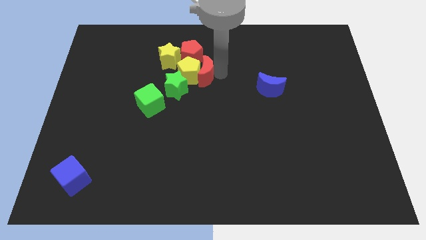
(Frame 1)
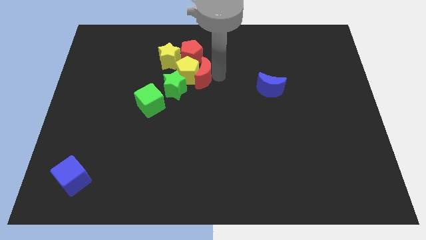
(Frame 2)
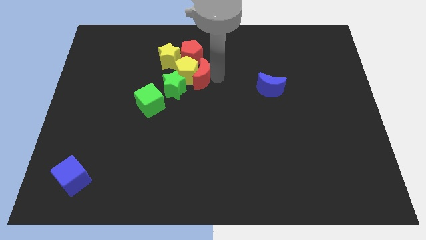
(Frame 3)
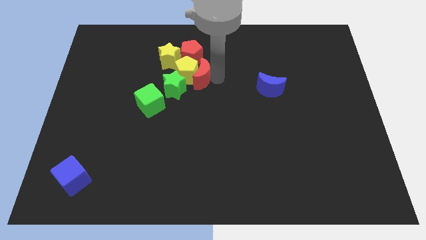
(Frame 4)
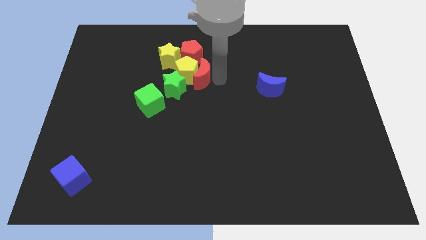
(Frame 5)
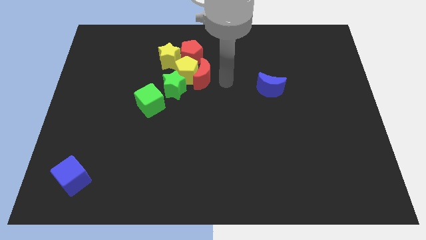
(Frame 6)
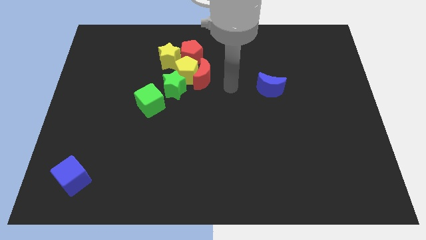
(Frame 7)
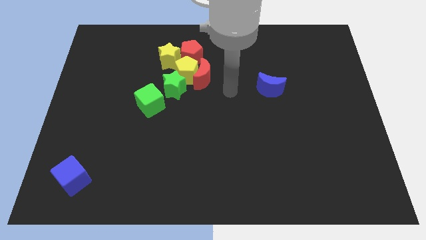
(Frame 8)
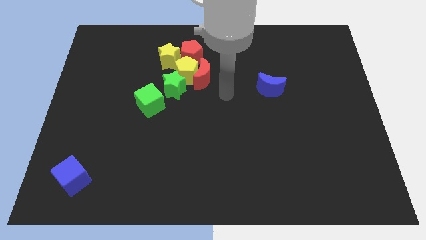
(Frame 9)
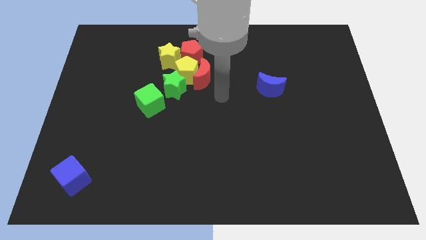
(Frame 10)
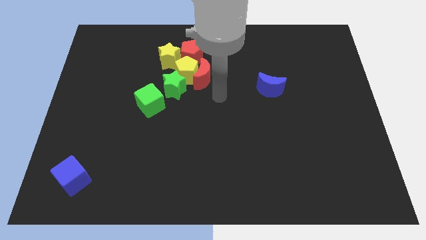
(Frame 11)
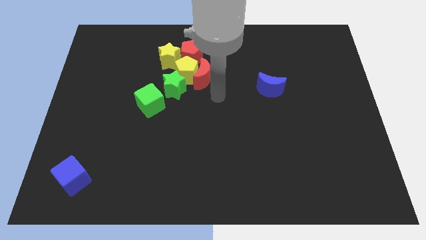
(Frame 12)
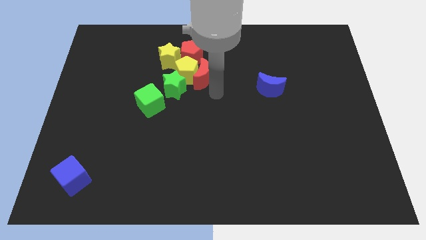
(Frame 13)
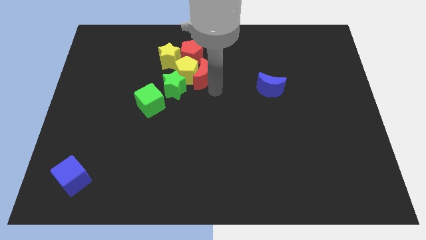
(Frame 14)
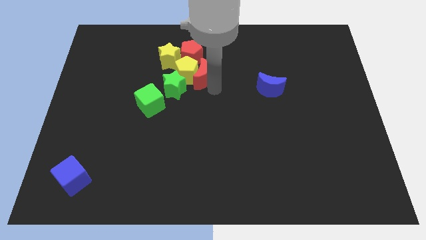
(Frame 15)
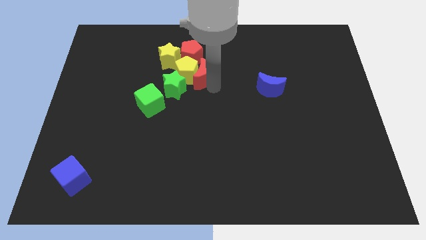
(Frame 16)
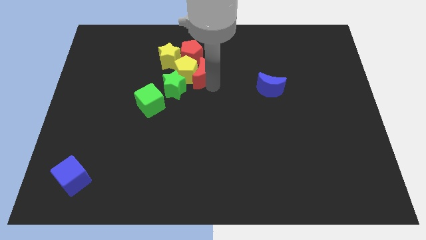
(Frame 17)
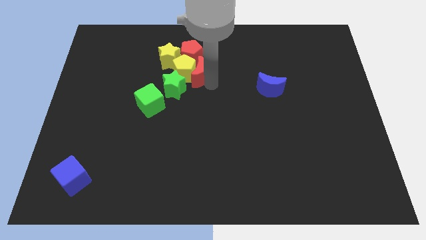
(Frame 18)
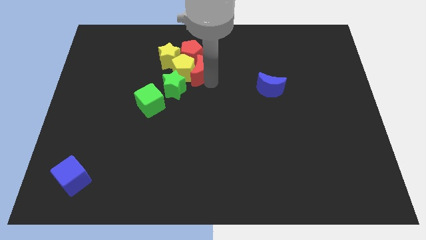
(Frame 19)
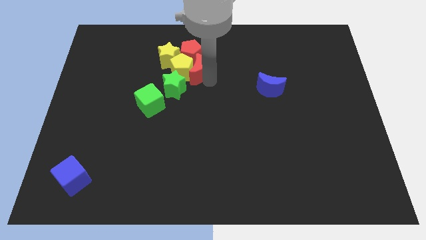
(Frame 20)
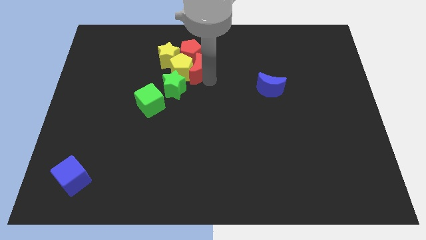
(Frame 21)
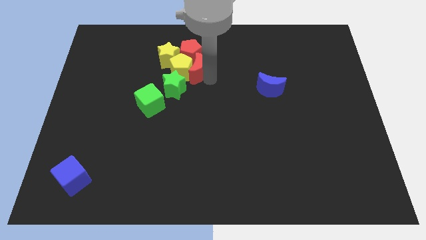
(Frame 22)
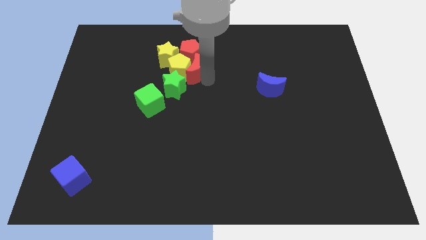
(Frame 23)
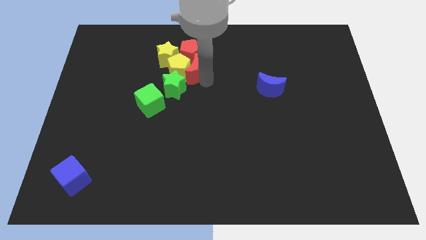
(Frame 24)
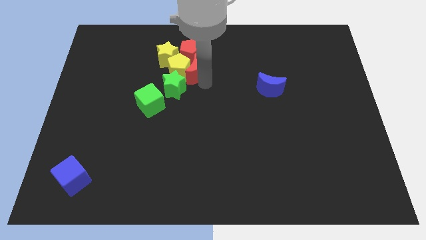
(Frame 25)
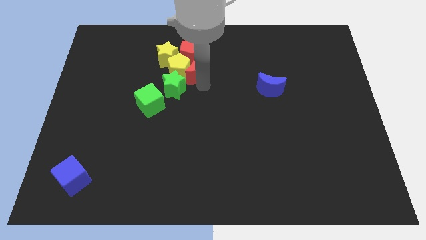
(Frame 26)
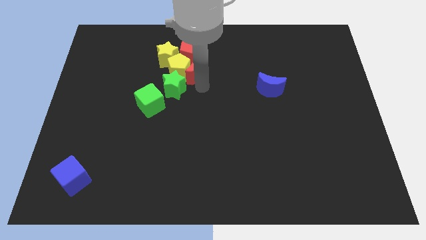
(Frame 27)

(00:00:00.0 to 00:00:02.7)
move the red crescent closely to the right of the yellow pentagon

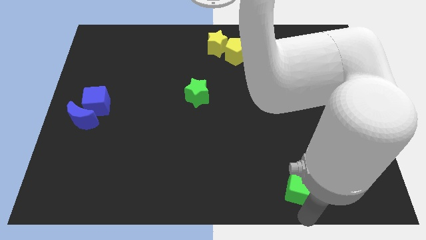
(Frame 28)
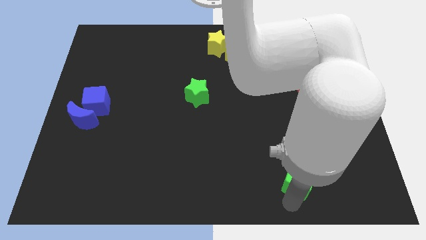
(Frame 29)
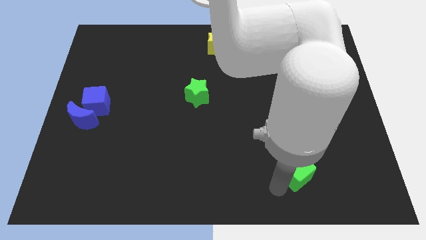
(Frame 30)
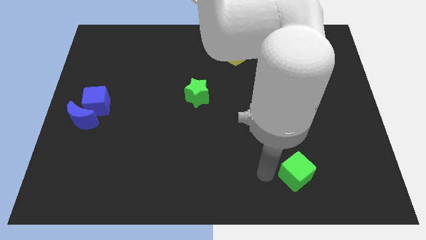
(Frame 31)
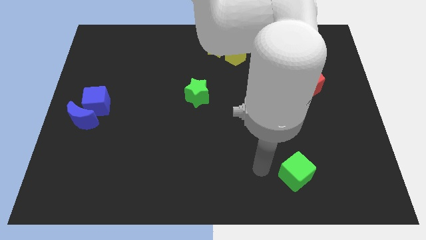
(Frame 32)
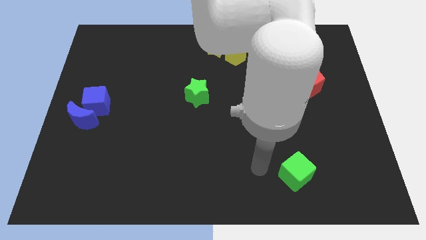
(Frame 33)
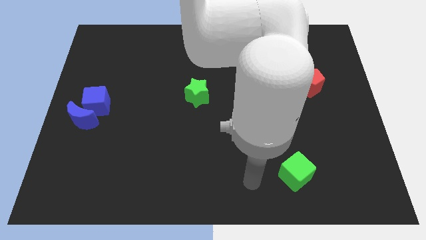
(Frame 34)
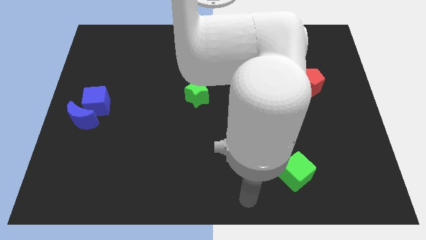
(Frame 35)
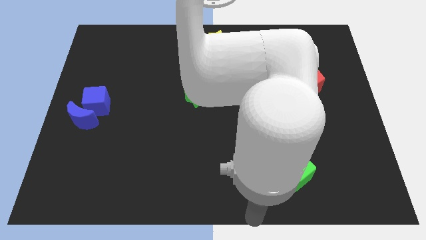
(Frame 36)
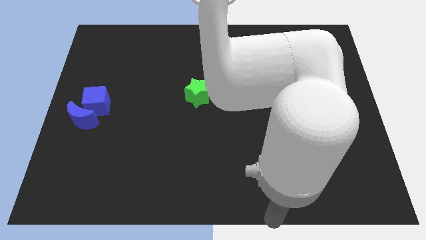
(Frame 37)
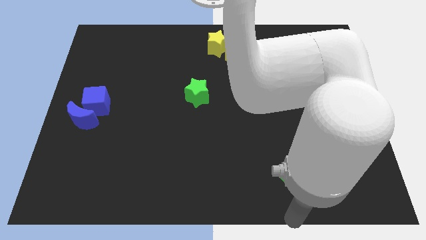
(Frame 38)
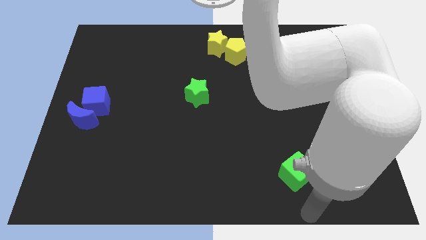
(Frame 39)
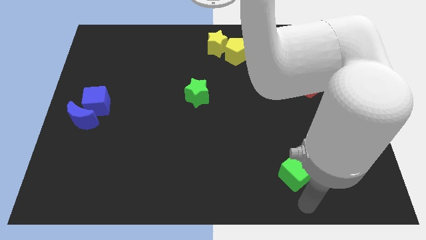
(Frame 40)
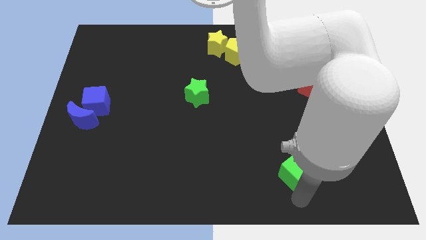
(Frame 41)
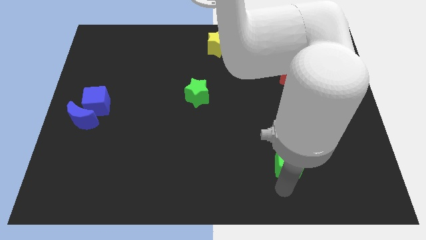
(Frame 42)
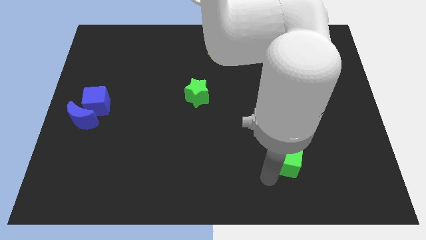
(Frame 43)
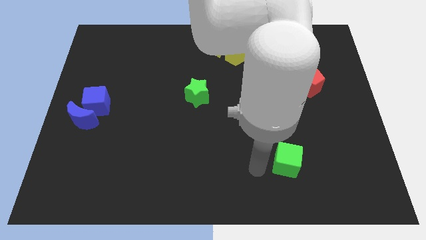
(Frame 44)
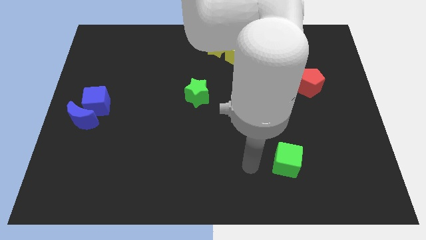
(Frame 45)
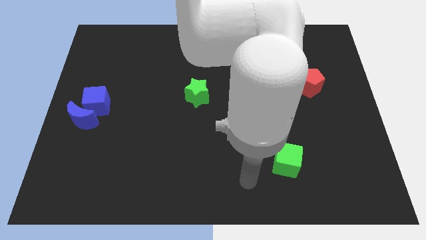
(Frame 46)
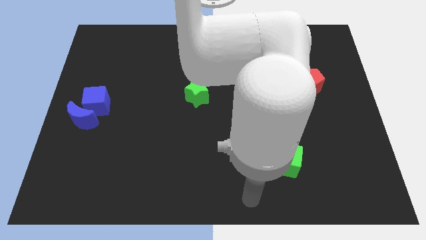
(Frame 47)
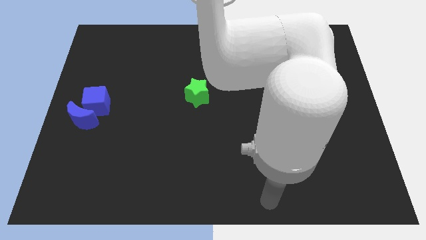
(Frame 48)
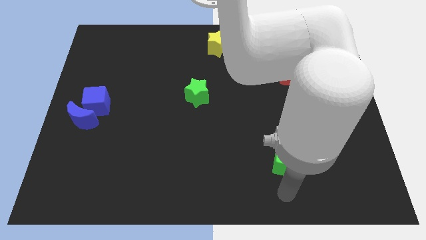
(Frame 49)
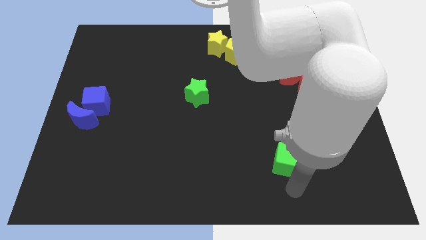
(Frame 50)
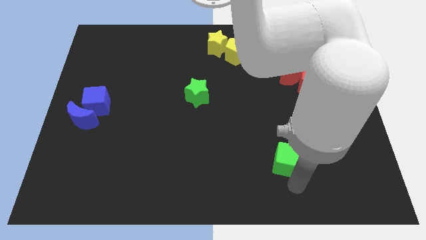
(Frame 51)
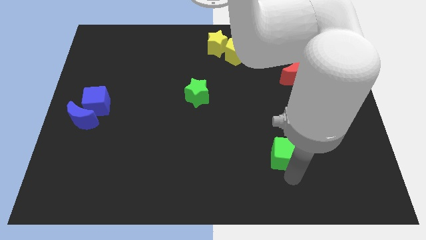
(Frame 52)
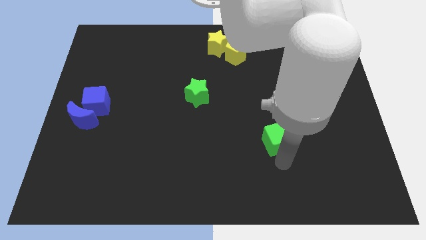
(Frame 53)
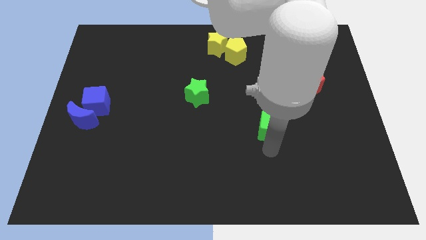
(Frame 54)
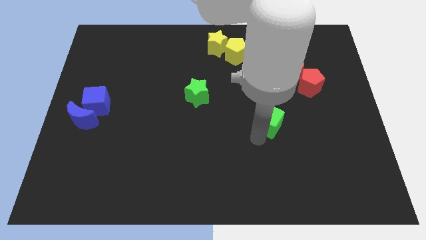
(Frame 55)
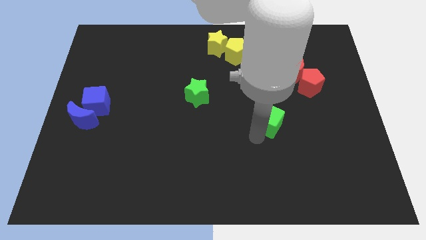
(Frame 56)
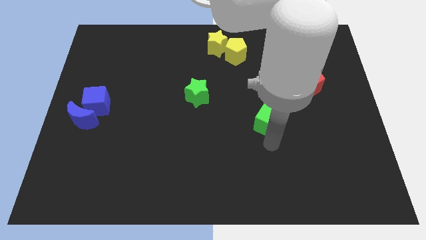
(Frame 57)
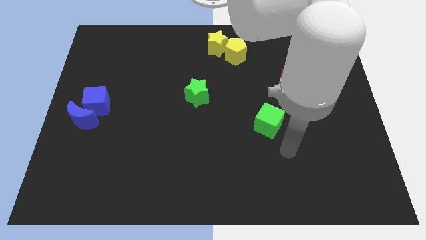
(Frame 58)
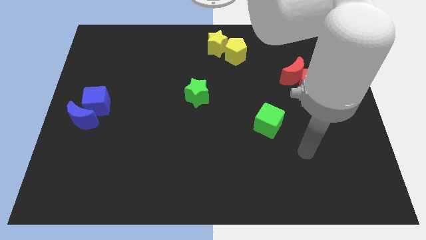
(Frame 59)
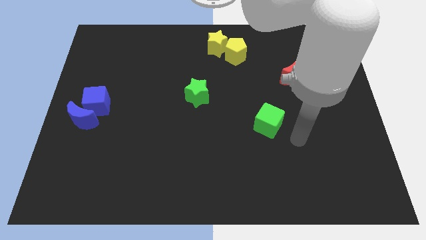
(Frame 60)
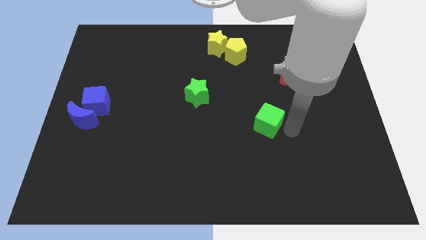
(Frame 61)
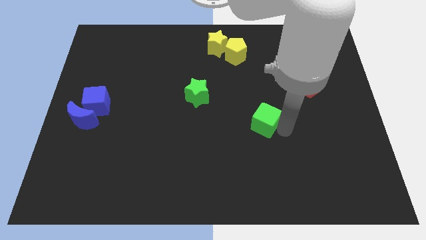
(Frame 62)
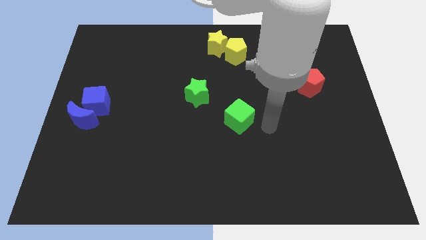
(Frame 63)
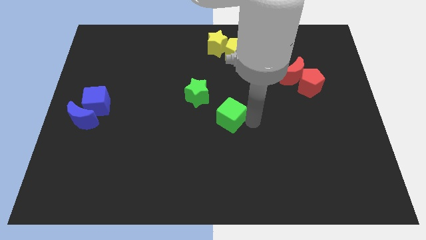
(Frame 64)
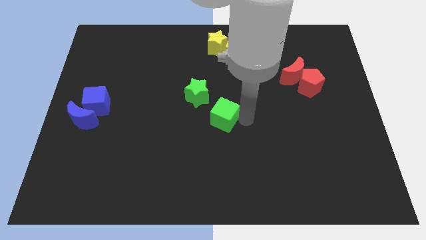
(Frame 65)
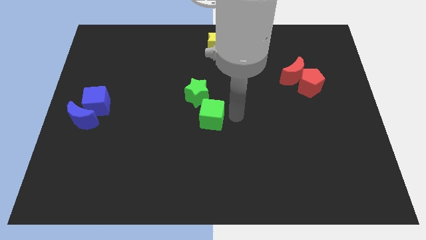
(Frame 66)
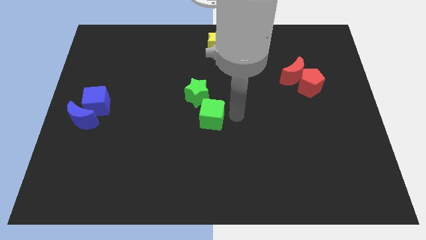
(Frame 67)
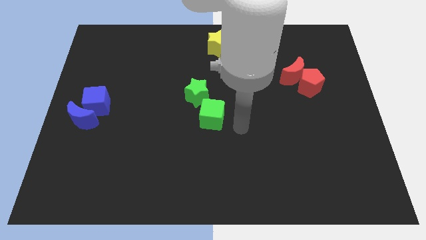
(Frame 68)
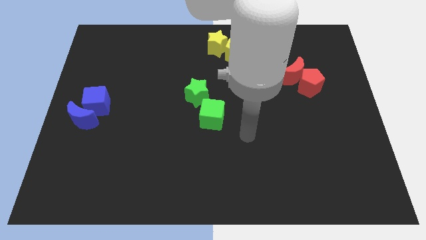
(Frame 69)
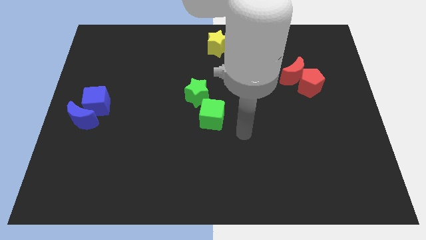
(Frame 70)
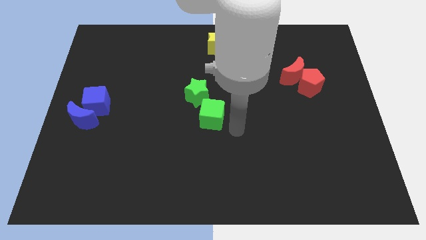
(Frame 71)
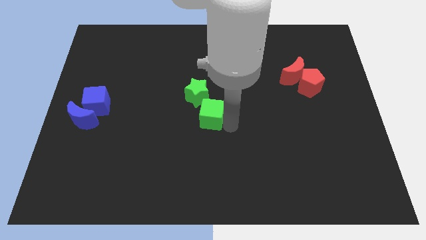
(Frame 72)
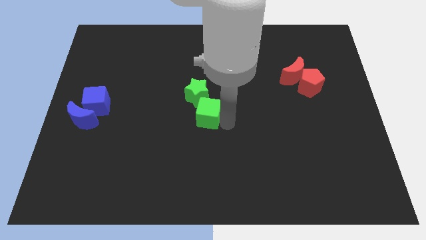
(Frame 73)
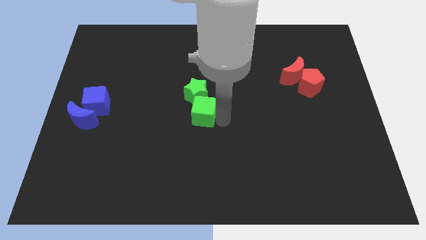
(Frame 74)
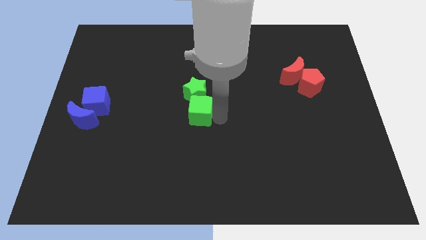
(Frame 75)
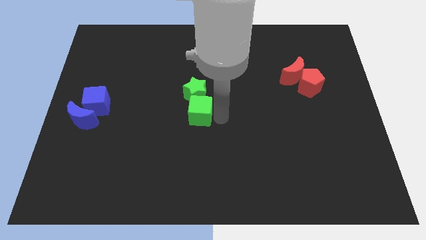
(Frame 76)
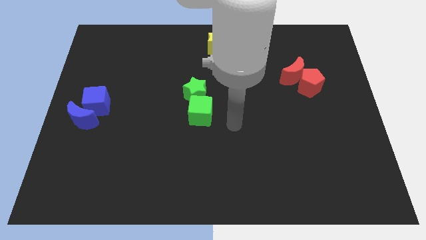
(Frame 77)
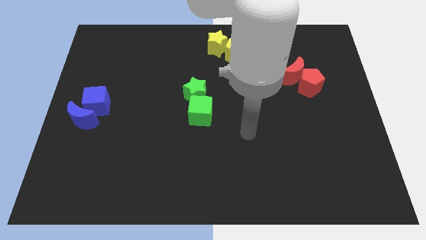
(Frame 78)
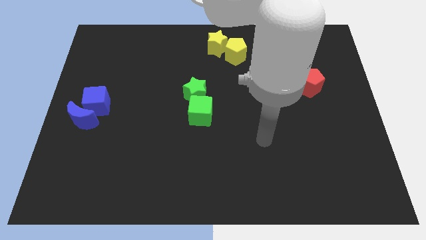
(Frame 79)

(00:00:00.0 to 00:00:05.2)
push the green cube towards the bottom to the green star

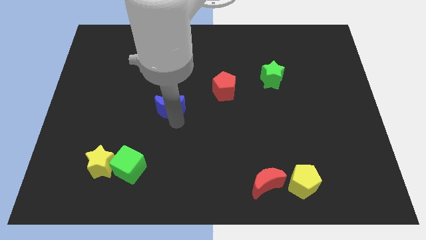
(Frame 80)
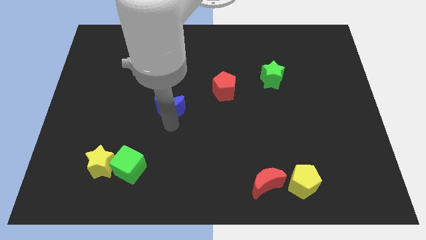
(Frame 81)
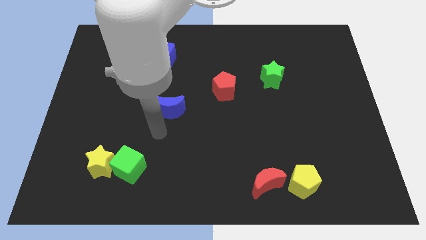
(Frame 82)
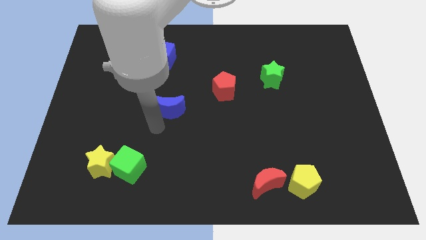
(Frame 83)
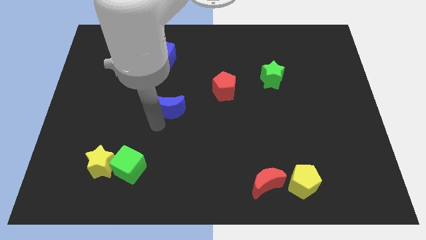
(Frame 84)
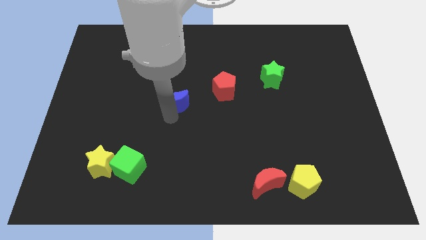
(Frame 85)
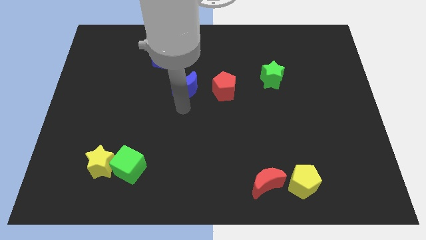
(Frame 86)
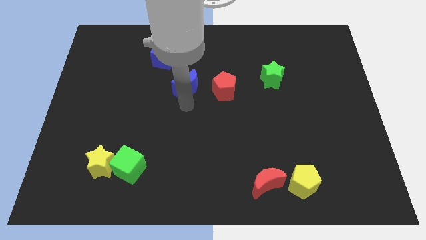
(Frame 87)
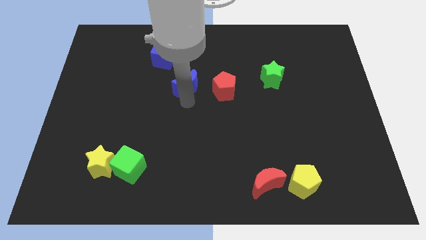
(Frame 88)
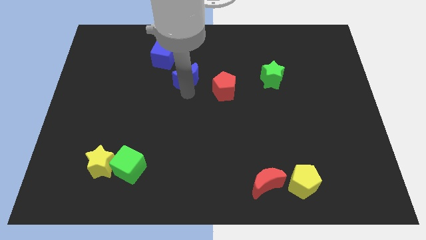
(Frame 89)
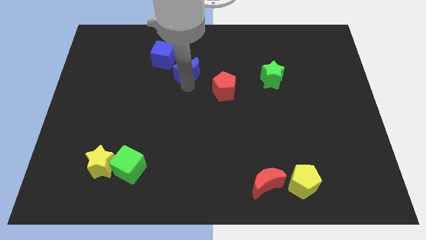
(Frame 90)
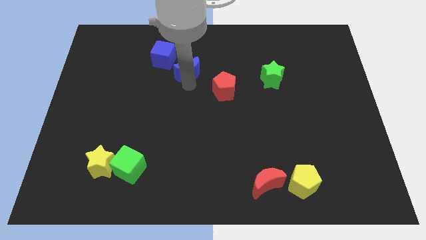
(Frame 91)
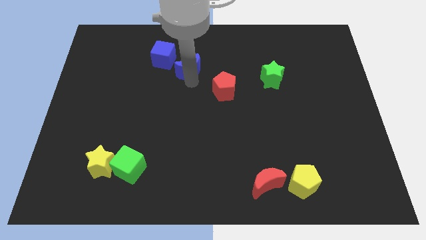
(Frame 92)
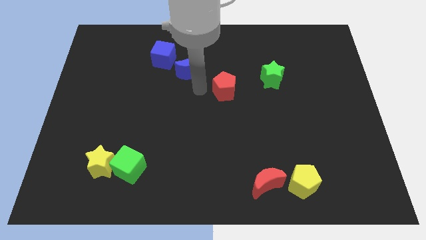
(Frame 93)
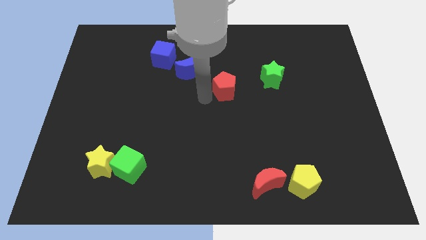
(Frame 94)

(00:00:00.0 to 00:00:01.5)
move the blue crescent to the right side of the blue cube
